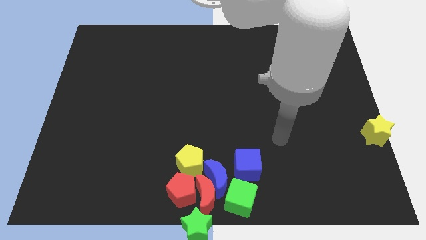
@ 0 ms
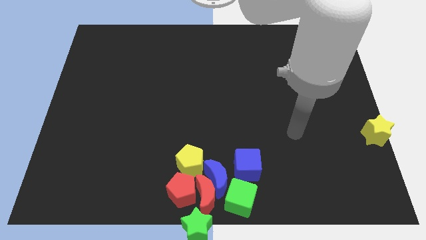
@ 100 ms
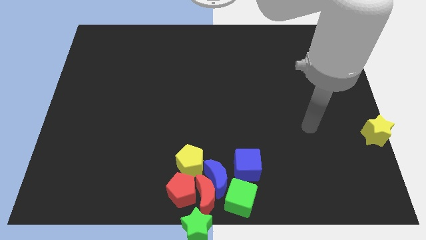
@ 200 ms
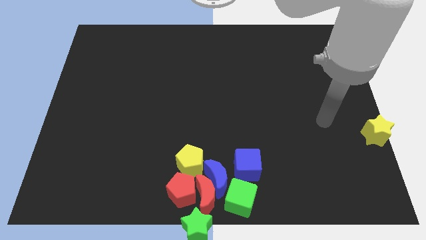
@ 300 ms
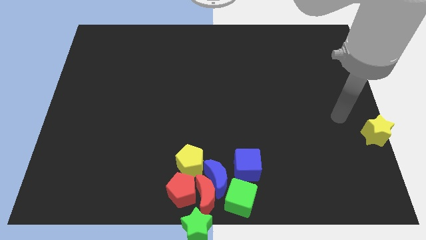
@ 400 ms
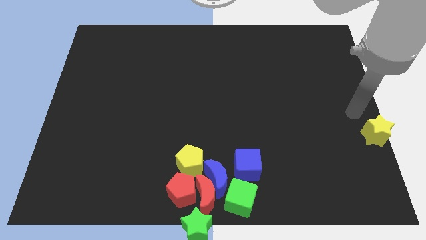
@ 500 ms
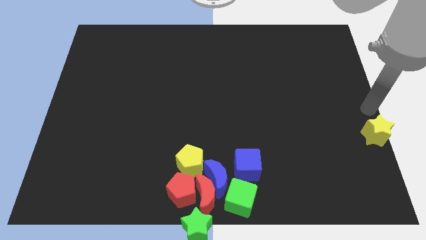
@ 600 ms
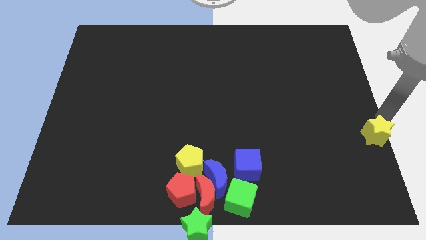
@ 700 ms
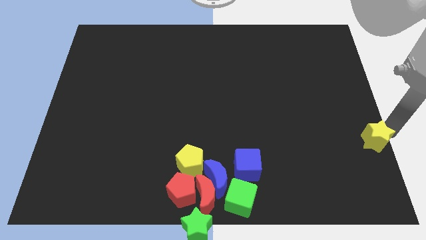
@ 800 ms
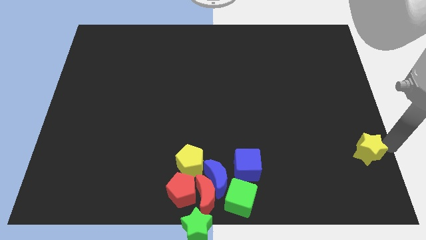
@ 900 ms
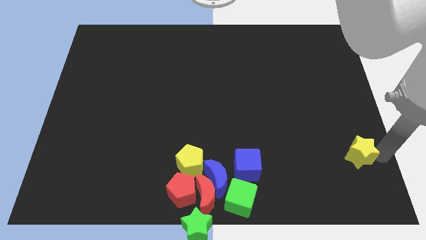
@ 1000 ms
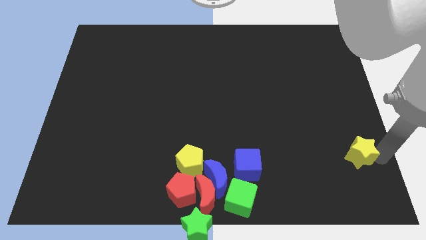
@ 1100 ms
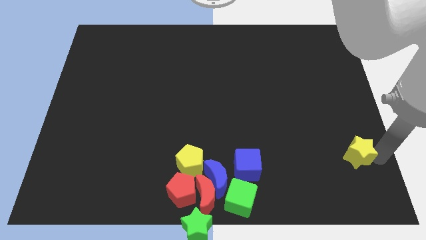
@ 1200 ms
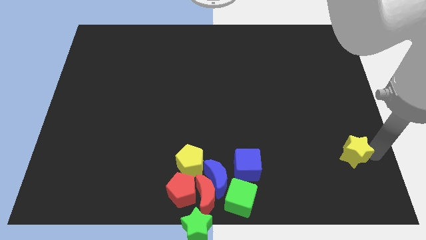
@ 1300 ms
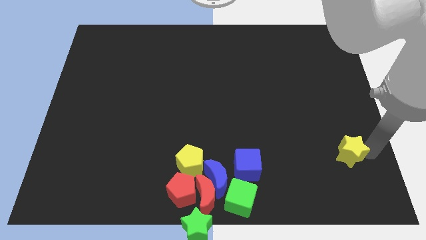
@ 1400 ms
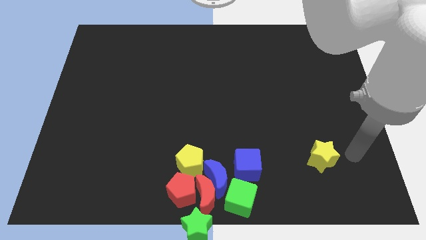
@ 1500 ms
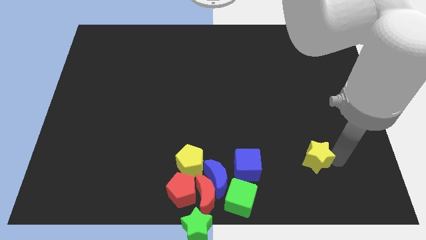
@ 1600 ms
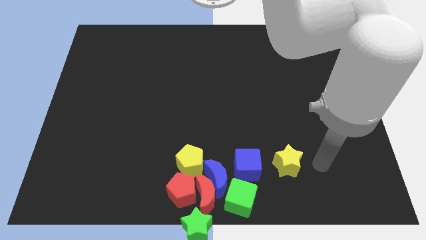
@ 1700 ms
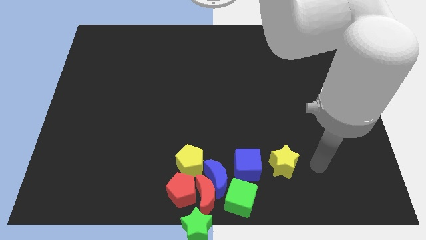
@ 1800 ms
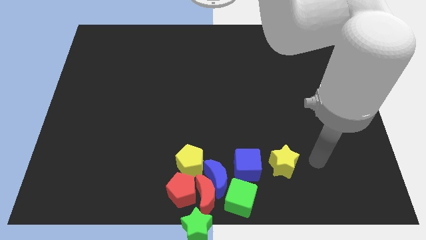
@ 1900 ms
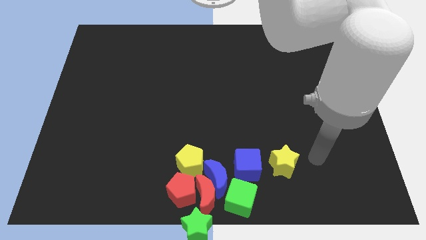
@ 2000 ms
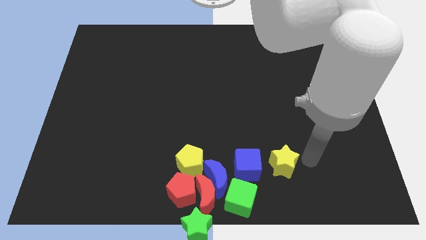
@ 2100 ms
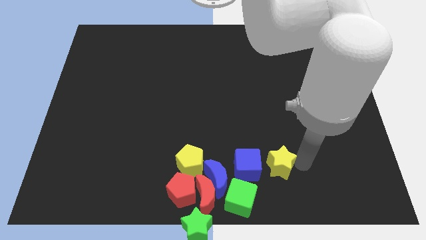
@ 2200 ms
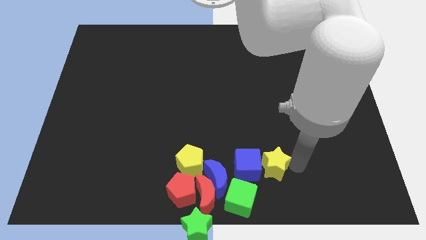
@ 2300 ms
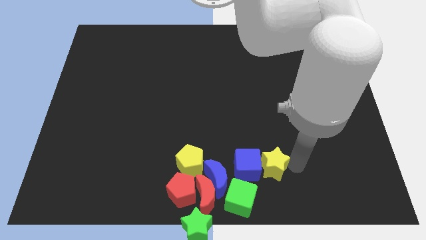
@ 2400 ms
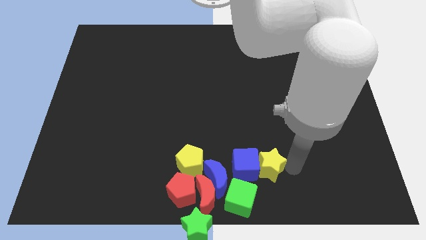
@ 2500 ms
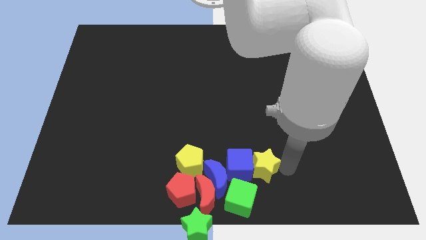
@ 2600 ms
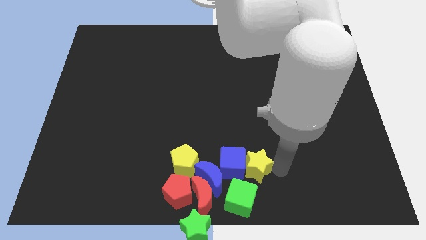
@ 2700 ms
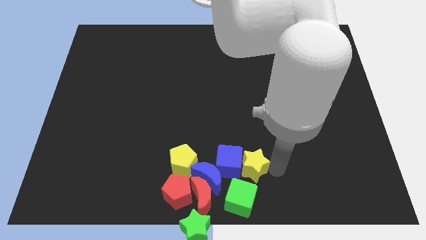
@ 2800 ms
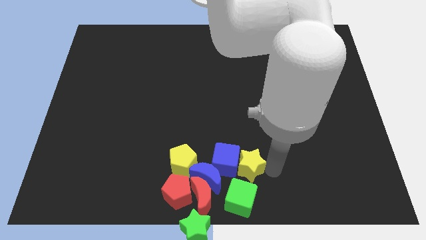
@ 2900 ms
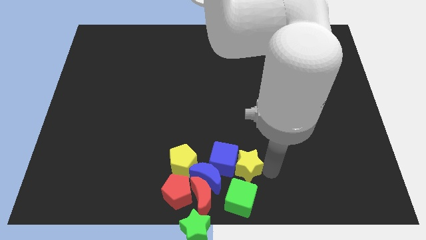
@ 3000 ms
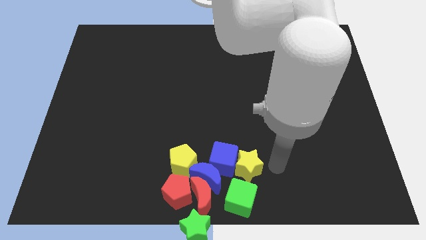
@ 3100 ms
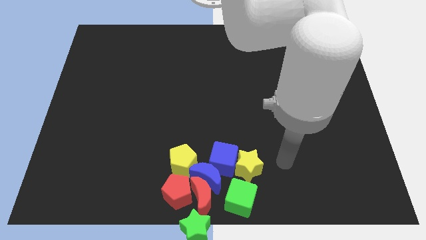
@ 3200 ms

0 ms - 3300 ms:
push yellow star in to blue cube

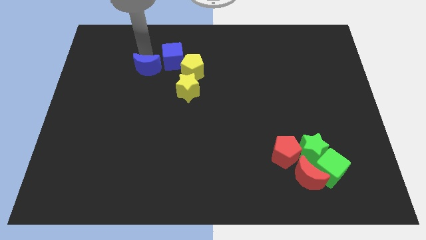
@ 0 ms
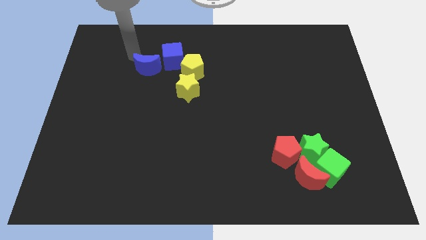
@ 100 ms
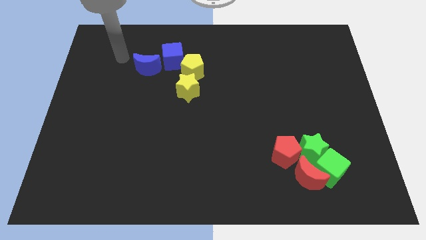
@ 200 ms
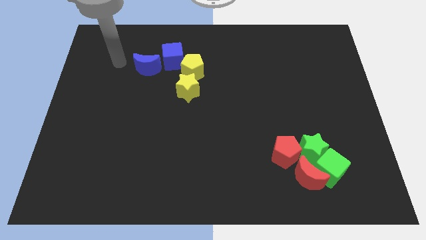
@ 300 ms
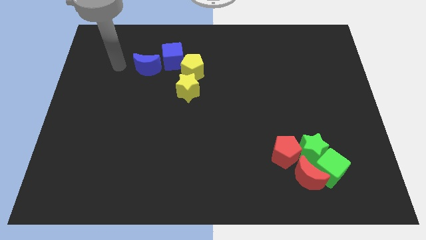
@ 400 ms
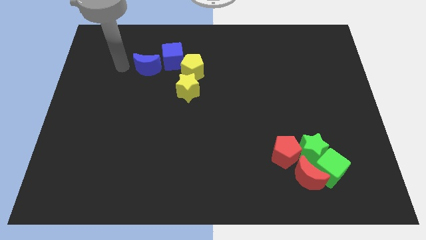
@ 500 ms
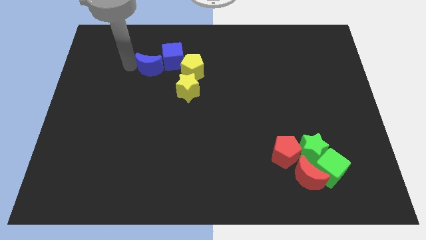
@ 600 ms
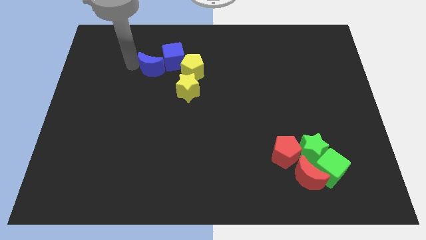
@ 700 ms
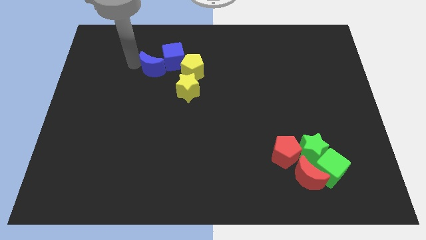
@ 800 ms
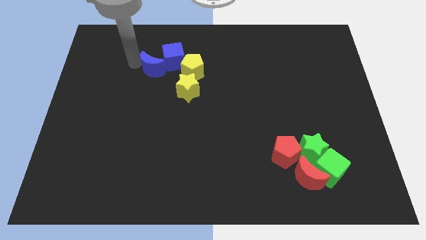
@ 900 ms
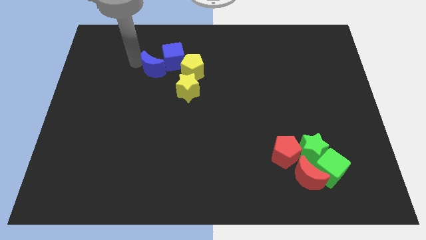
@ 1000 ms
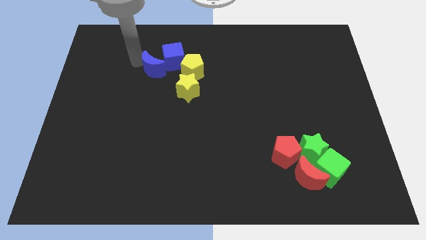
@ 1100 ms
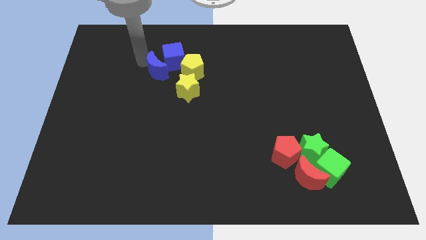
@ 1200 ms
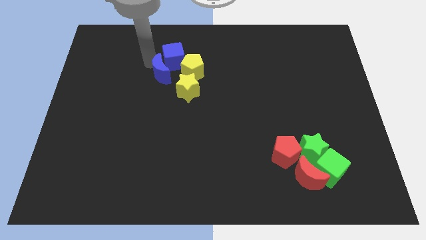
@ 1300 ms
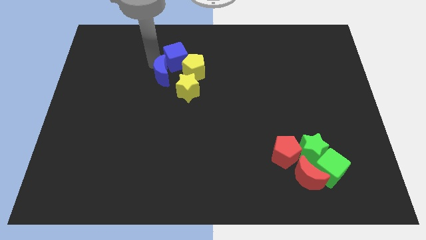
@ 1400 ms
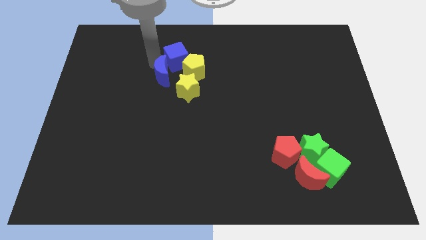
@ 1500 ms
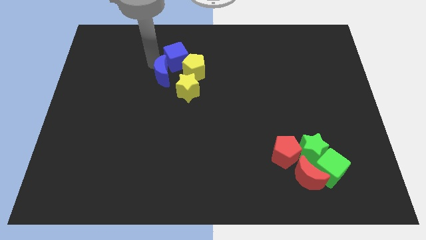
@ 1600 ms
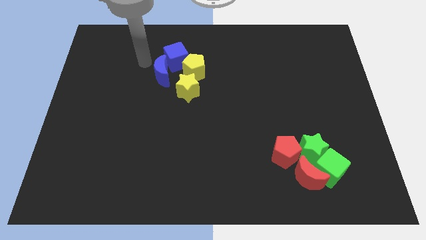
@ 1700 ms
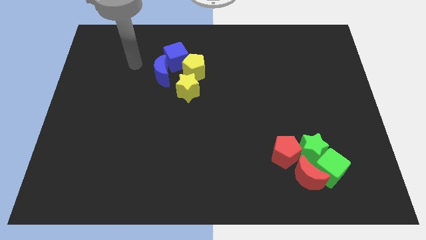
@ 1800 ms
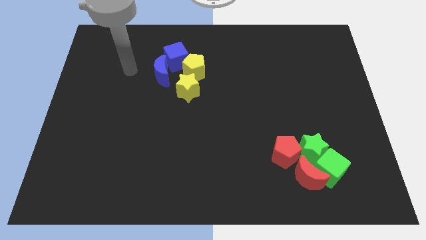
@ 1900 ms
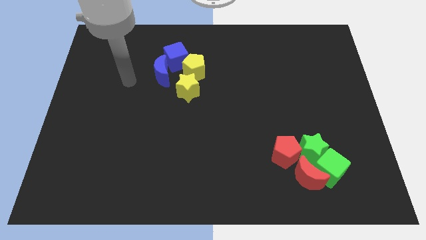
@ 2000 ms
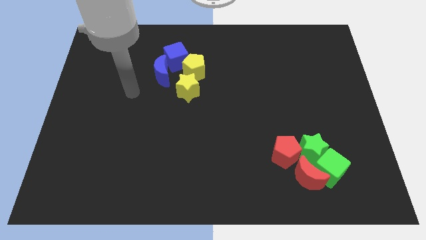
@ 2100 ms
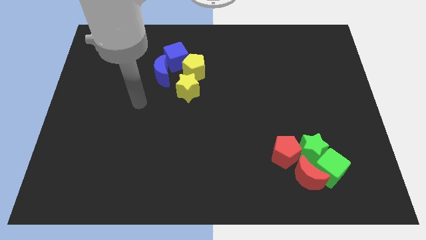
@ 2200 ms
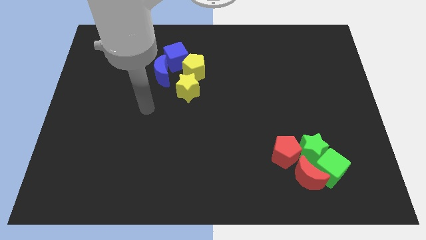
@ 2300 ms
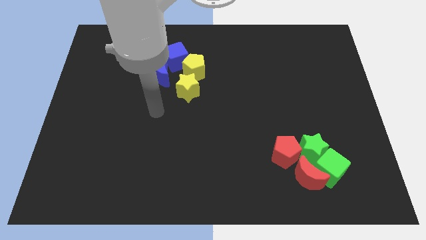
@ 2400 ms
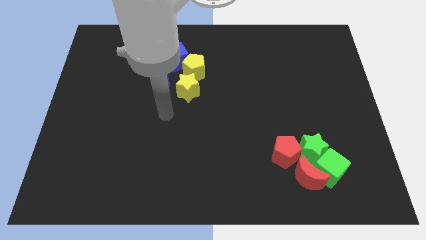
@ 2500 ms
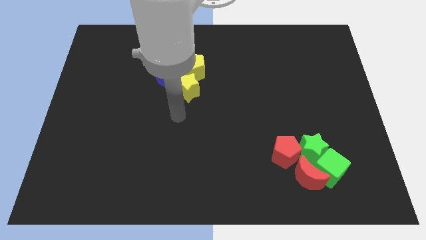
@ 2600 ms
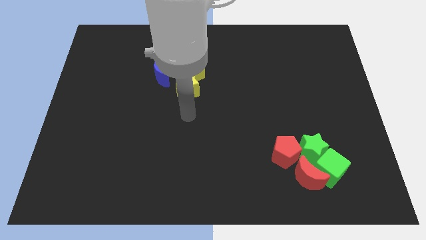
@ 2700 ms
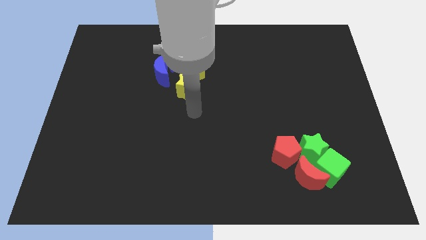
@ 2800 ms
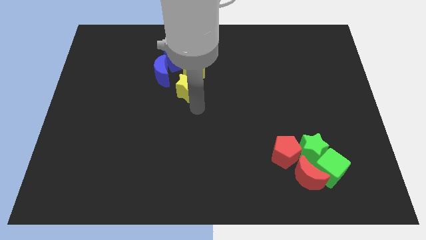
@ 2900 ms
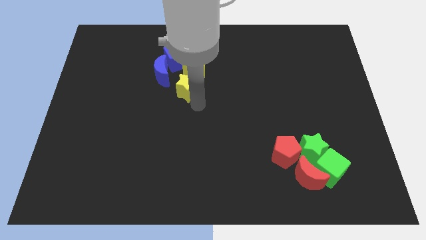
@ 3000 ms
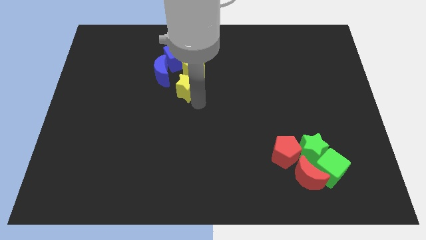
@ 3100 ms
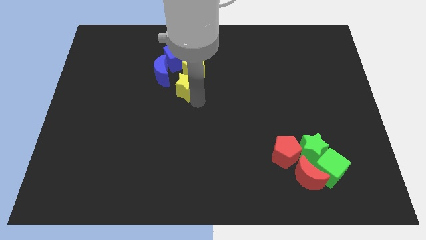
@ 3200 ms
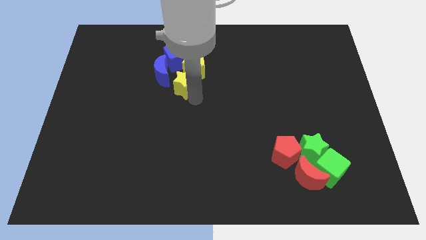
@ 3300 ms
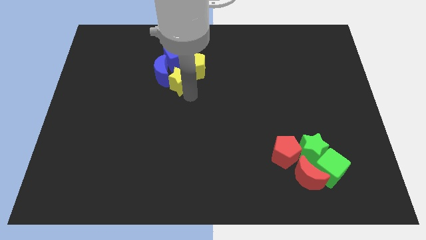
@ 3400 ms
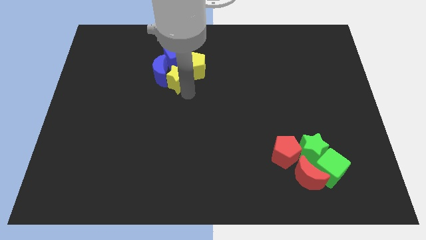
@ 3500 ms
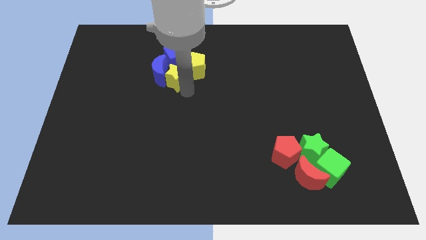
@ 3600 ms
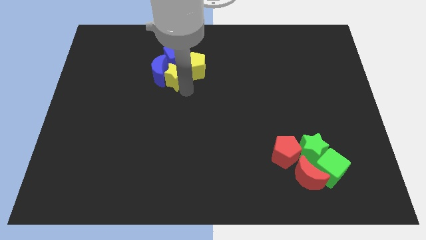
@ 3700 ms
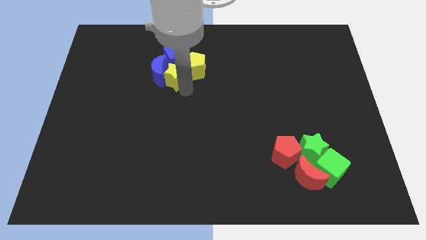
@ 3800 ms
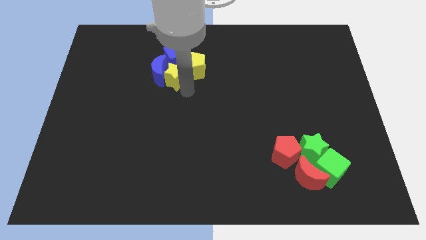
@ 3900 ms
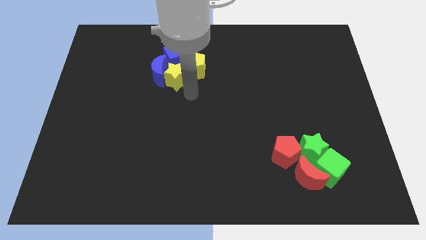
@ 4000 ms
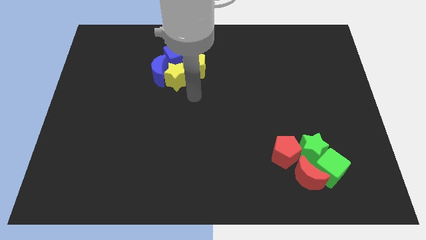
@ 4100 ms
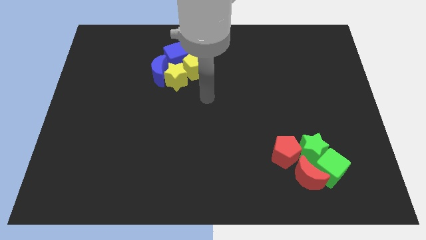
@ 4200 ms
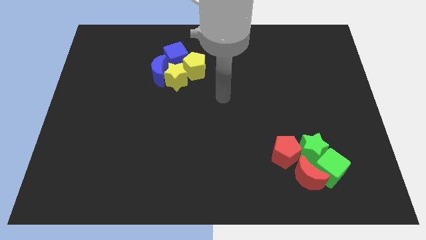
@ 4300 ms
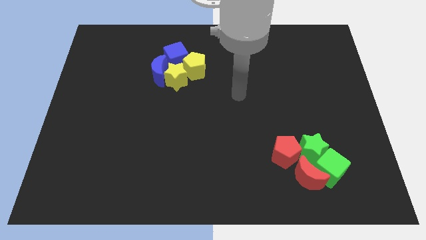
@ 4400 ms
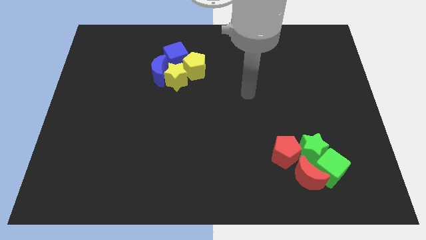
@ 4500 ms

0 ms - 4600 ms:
make a group with the help of yellow and blue blocks

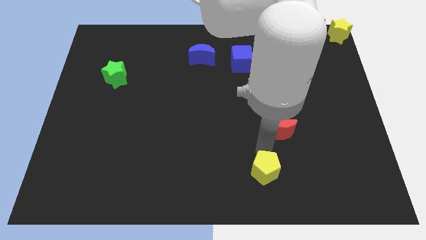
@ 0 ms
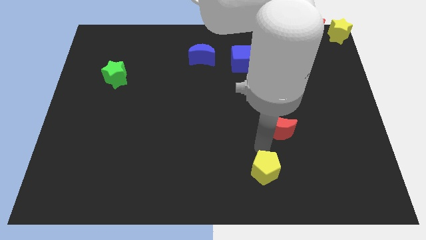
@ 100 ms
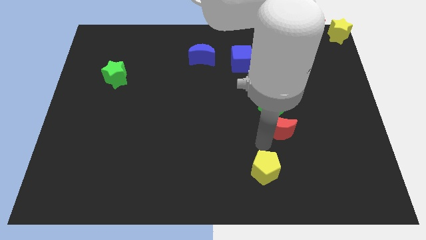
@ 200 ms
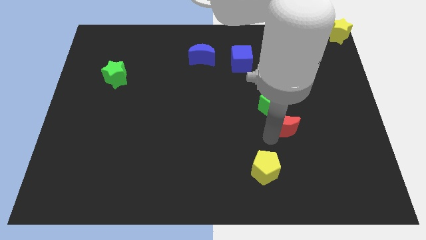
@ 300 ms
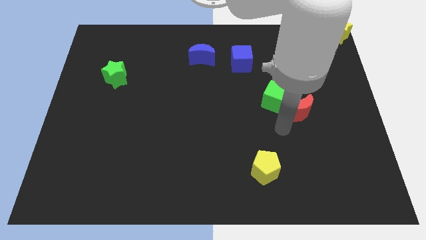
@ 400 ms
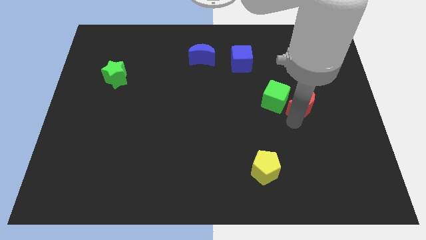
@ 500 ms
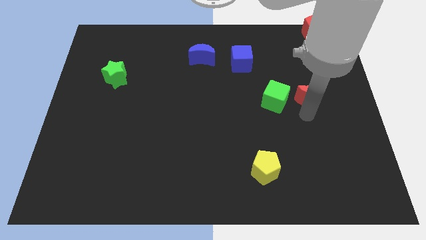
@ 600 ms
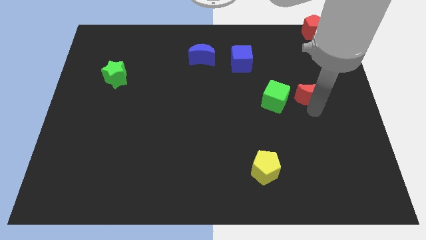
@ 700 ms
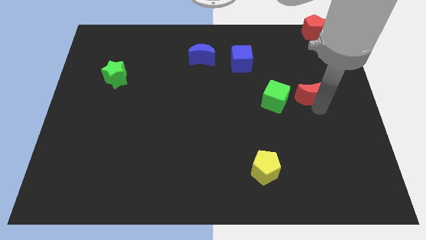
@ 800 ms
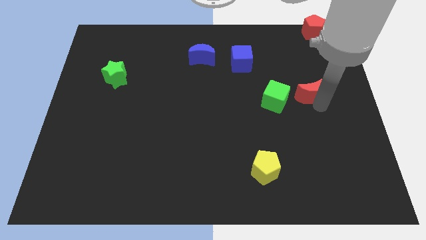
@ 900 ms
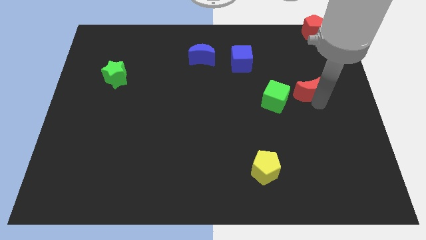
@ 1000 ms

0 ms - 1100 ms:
move red moon to the right of green cube
